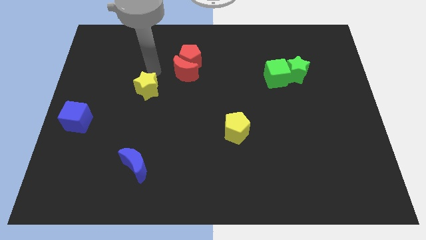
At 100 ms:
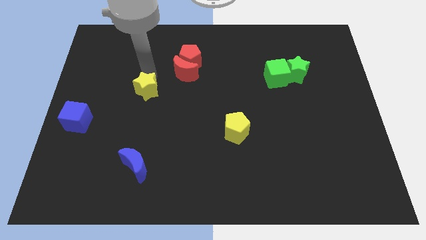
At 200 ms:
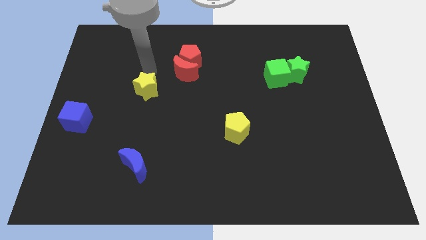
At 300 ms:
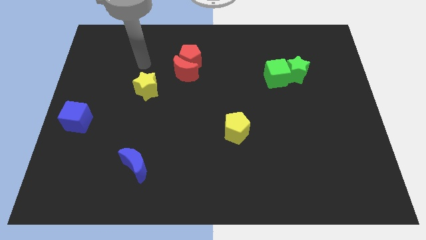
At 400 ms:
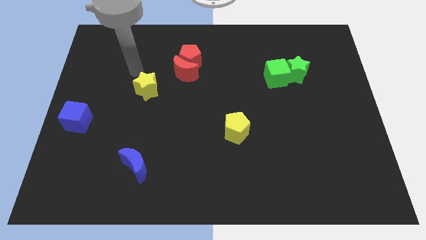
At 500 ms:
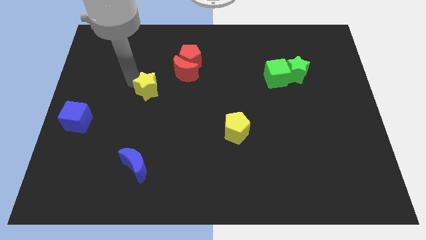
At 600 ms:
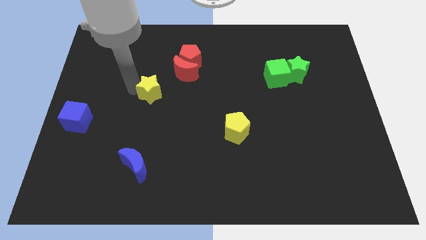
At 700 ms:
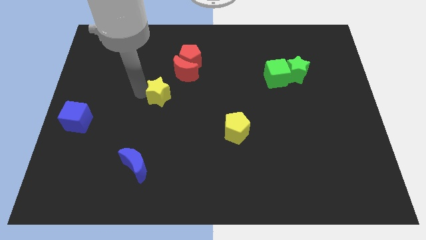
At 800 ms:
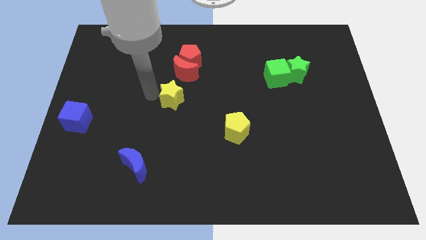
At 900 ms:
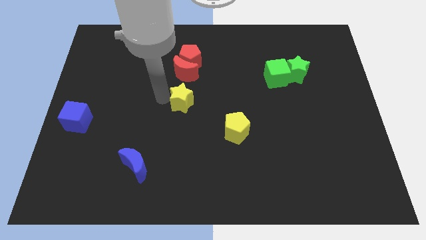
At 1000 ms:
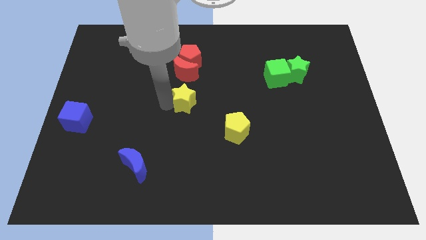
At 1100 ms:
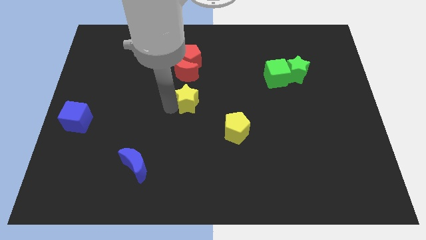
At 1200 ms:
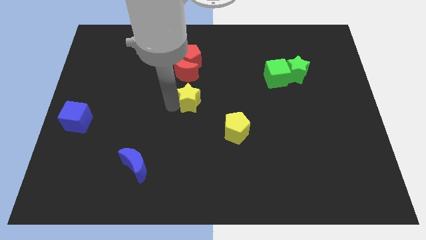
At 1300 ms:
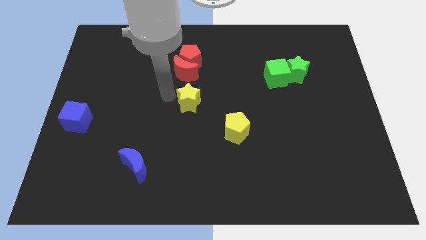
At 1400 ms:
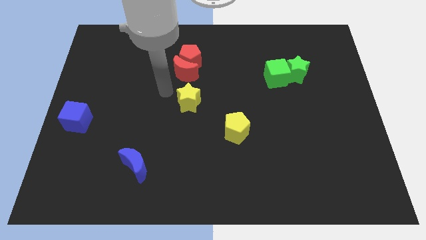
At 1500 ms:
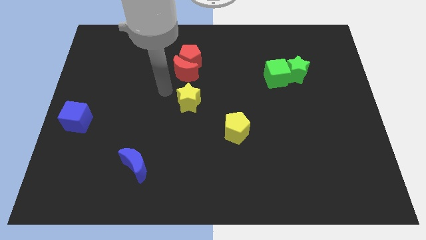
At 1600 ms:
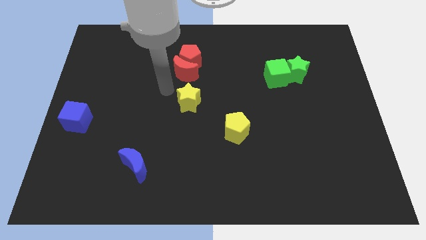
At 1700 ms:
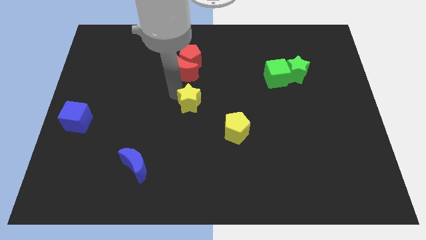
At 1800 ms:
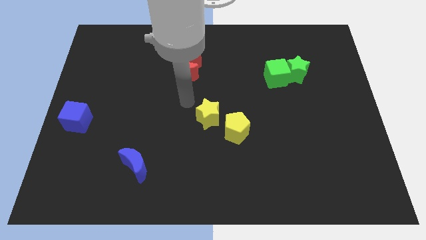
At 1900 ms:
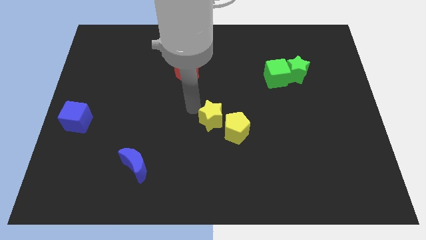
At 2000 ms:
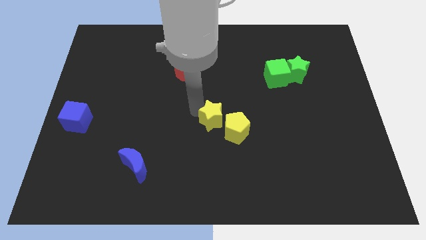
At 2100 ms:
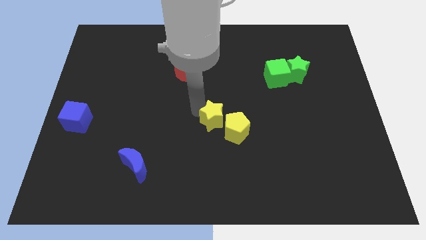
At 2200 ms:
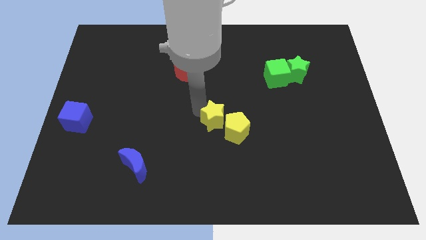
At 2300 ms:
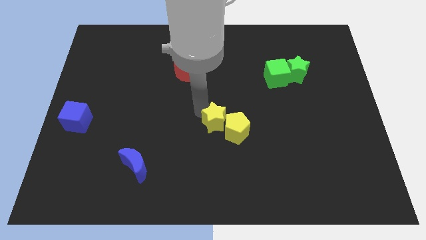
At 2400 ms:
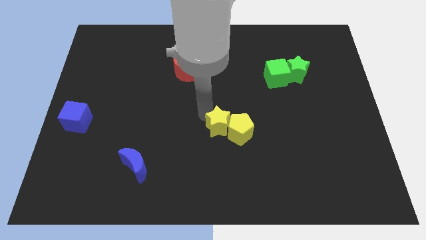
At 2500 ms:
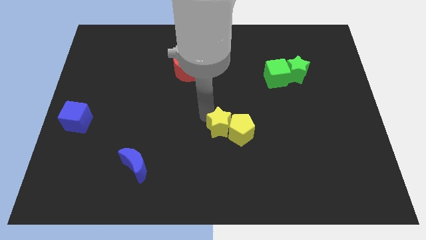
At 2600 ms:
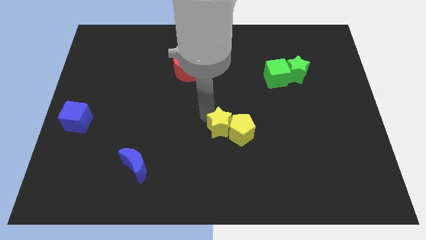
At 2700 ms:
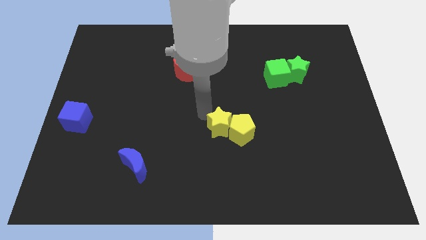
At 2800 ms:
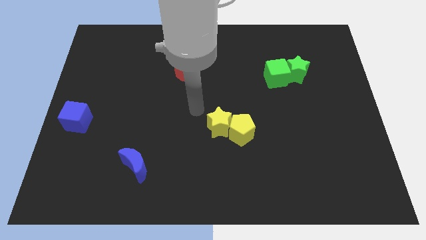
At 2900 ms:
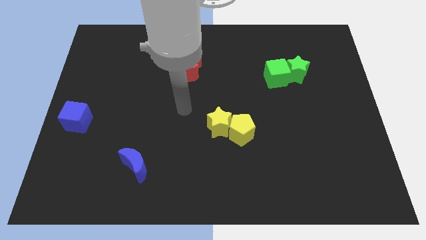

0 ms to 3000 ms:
push the yellow star into the yellow pentagon

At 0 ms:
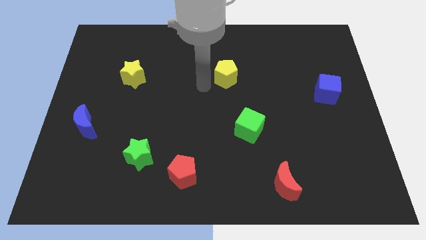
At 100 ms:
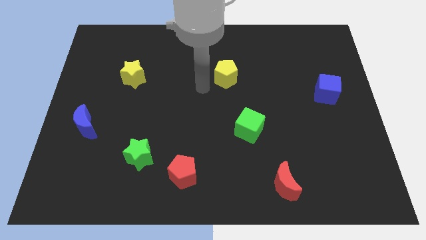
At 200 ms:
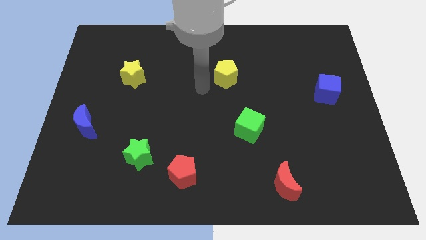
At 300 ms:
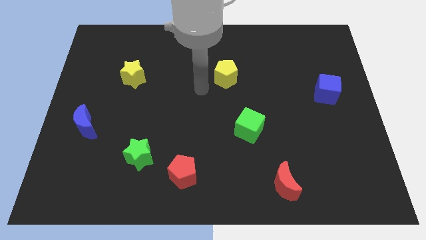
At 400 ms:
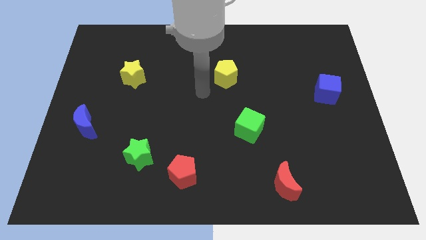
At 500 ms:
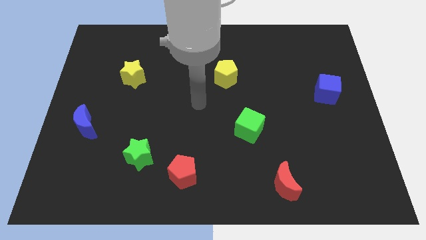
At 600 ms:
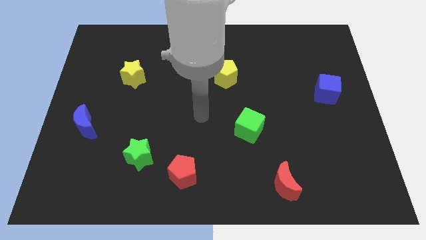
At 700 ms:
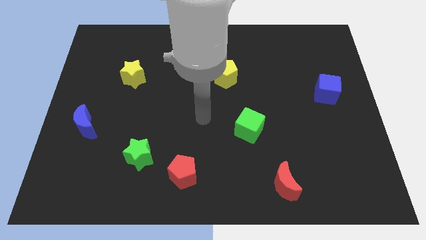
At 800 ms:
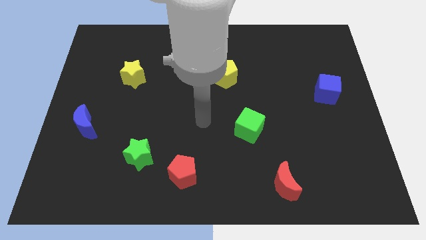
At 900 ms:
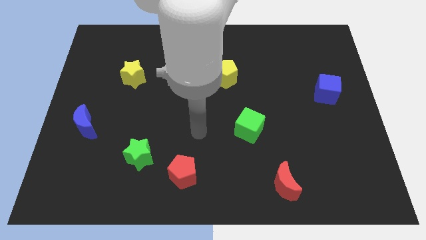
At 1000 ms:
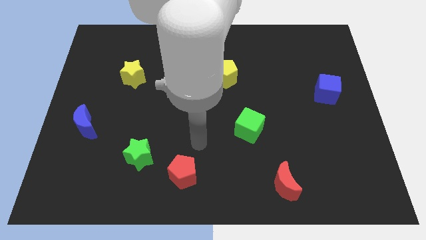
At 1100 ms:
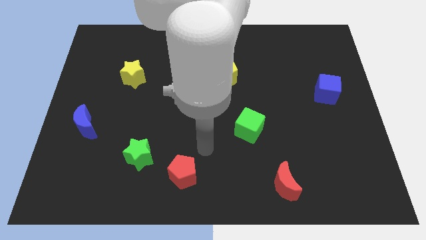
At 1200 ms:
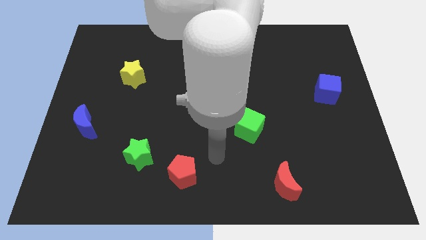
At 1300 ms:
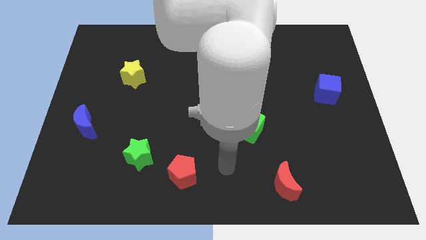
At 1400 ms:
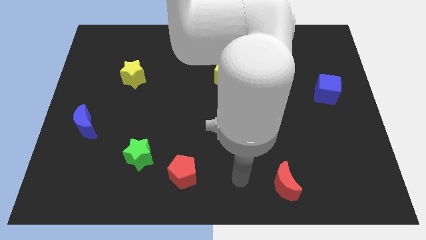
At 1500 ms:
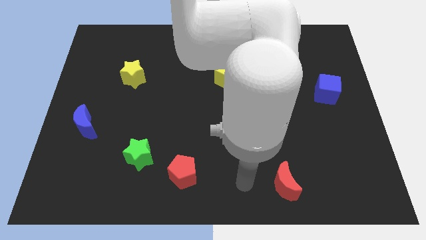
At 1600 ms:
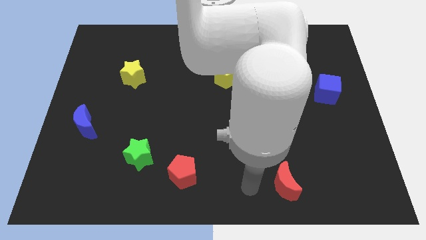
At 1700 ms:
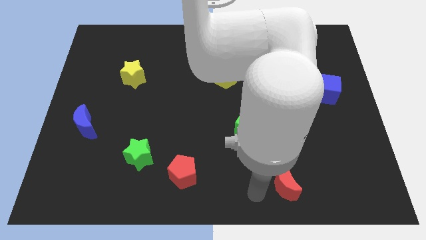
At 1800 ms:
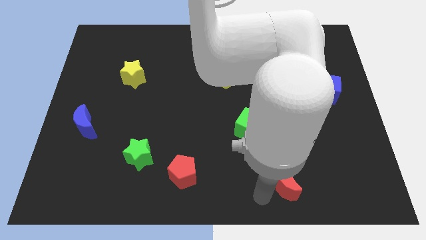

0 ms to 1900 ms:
move your arm towards the red crescent

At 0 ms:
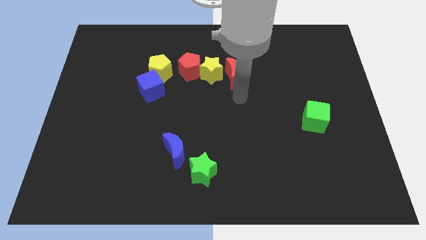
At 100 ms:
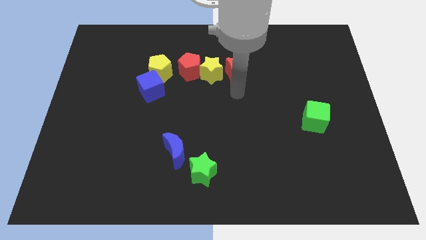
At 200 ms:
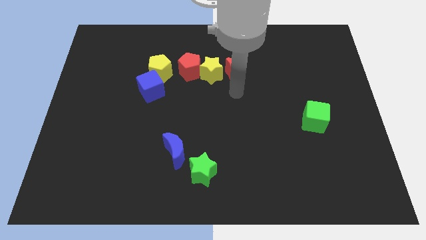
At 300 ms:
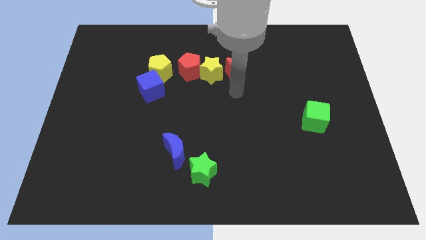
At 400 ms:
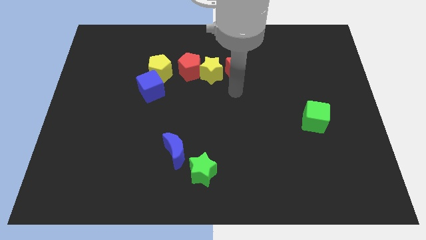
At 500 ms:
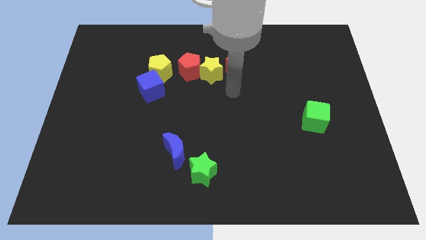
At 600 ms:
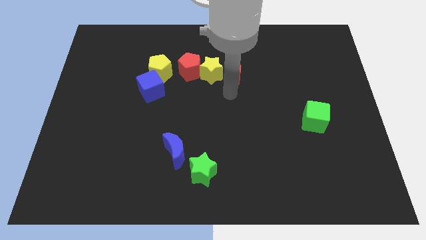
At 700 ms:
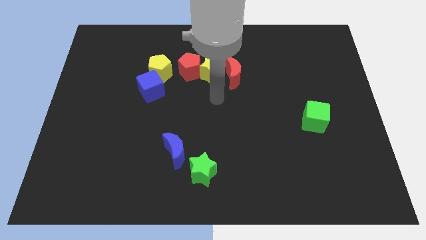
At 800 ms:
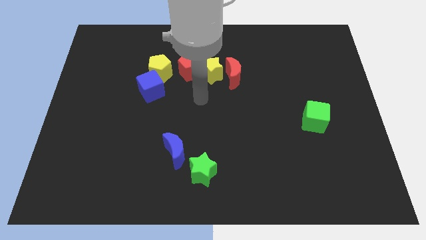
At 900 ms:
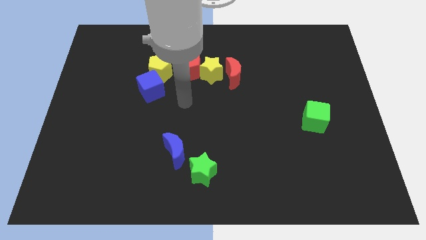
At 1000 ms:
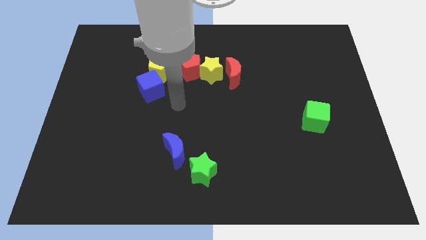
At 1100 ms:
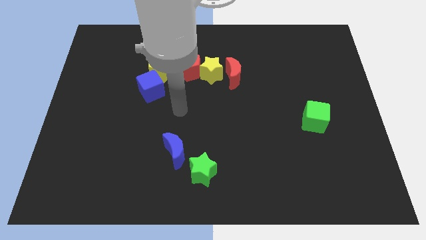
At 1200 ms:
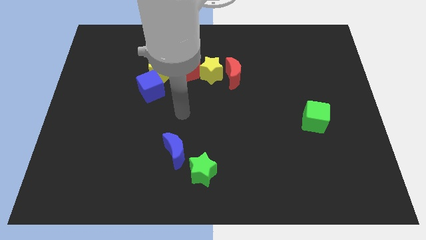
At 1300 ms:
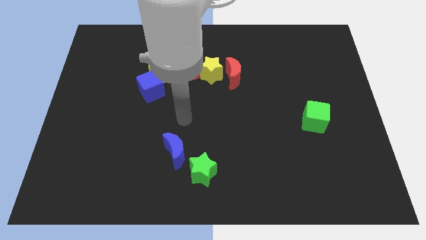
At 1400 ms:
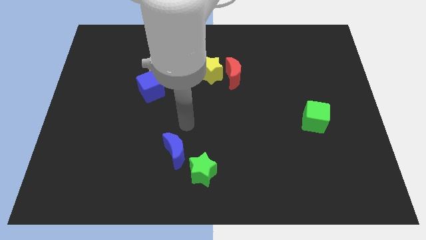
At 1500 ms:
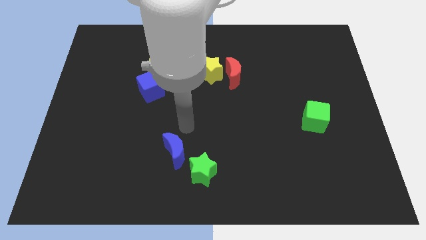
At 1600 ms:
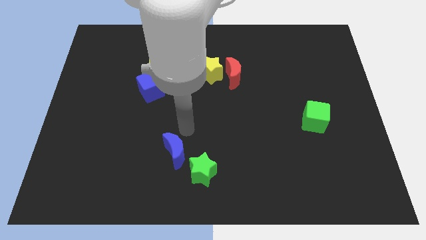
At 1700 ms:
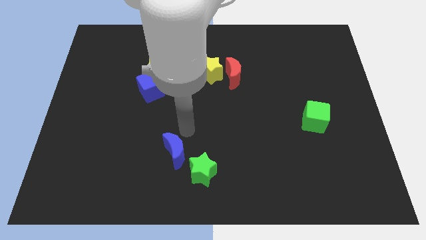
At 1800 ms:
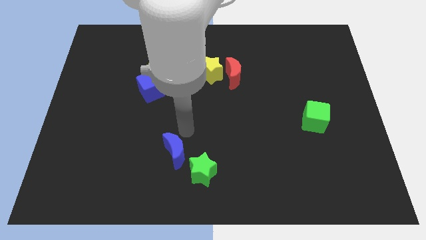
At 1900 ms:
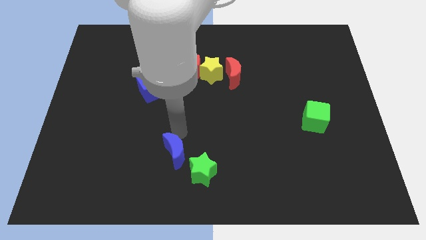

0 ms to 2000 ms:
place the arm into the blue red crescent

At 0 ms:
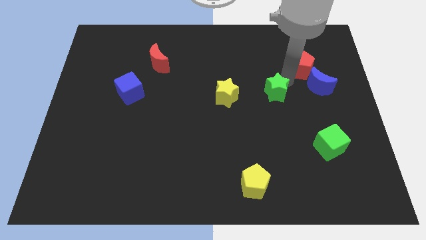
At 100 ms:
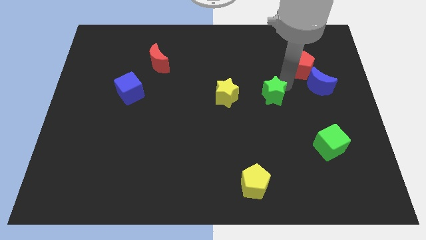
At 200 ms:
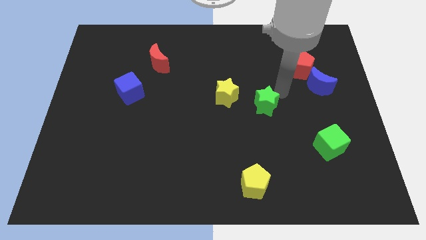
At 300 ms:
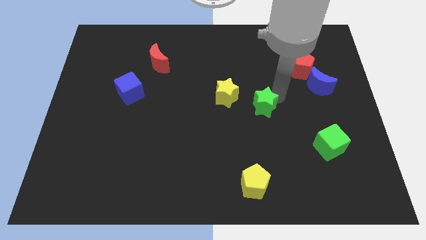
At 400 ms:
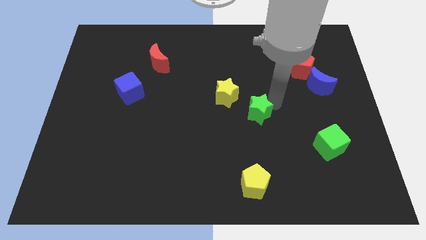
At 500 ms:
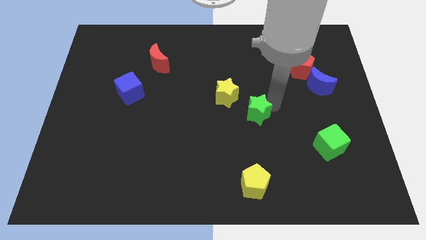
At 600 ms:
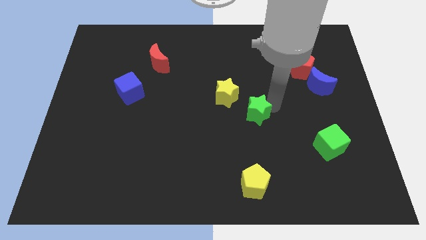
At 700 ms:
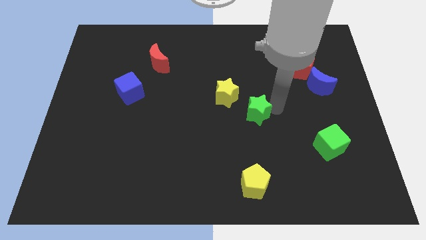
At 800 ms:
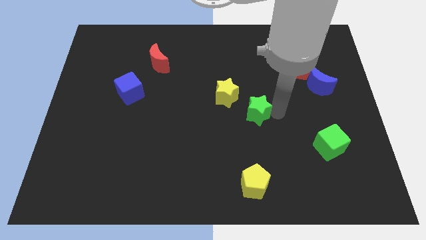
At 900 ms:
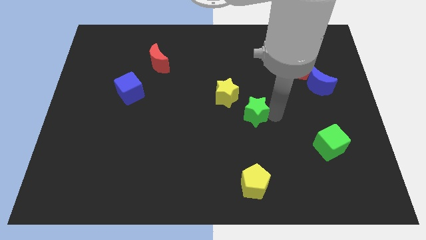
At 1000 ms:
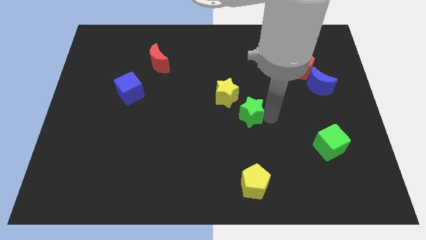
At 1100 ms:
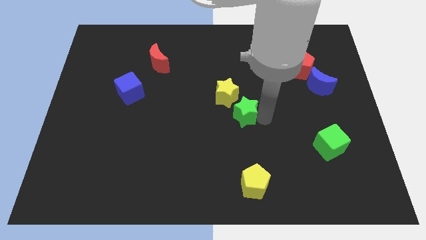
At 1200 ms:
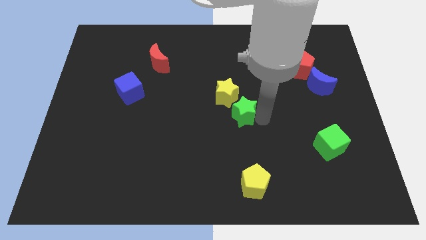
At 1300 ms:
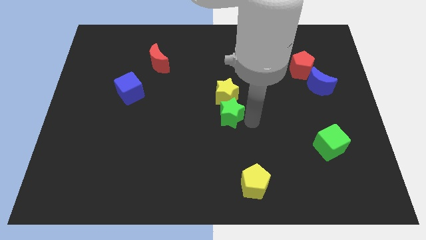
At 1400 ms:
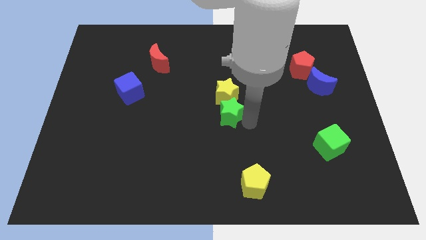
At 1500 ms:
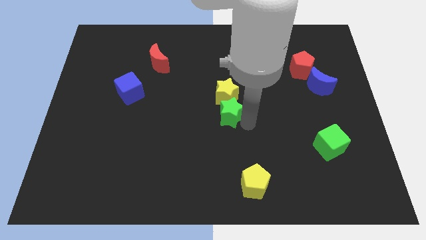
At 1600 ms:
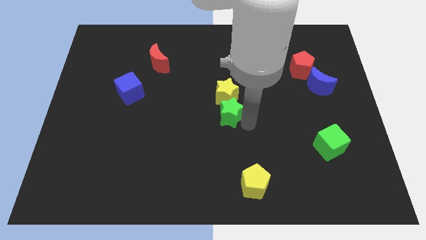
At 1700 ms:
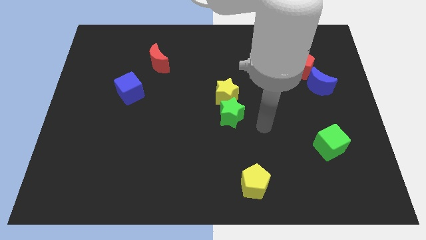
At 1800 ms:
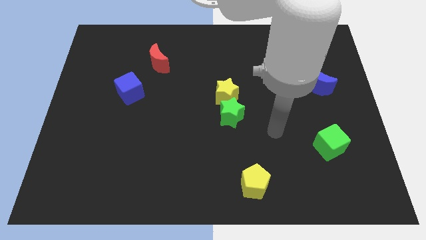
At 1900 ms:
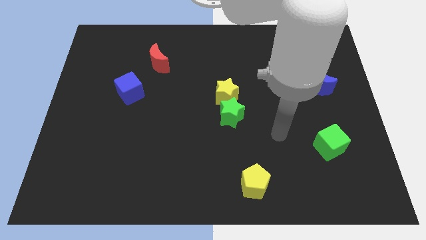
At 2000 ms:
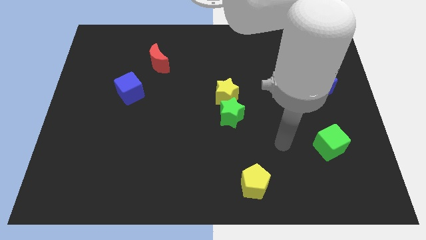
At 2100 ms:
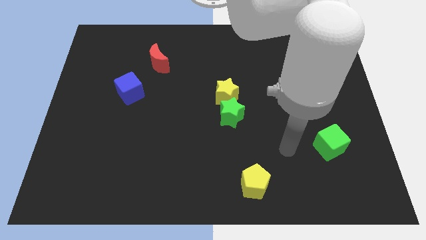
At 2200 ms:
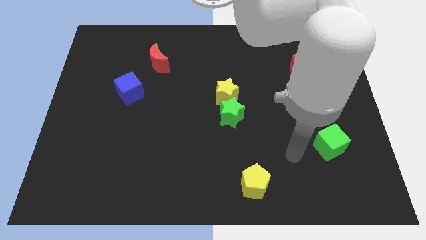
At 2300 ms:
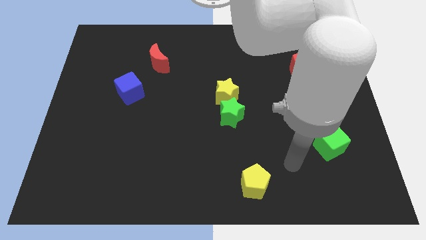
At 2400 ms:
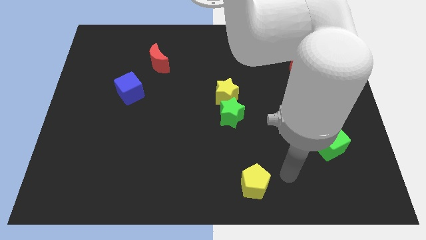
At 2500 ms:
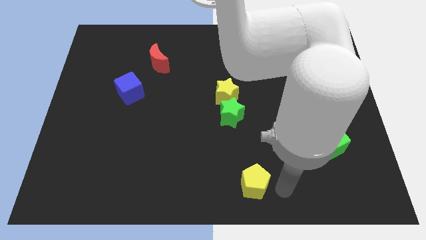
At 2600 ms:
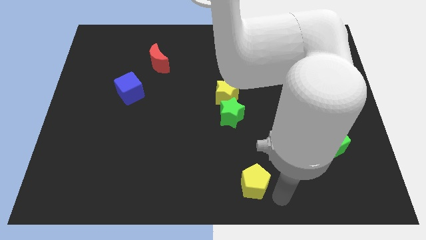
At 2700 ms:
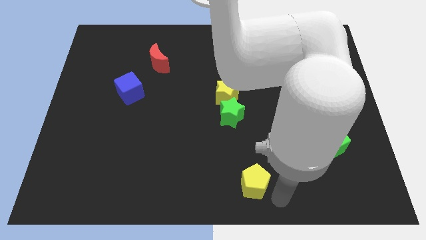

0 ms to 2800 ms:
slide the green star below the yellow star
